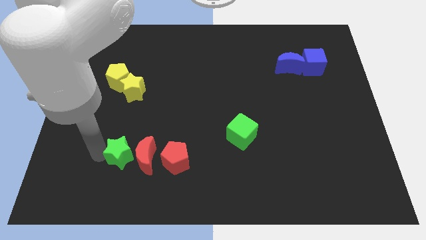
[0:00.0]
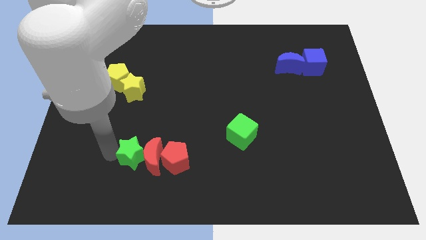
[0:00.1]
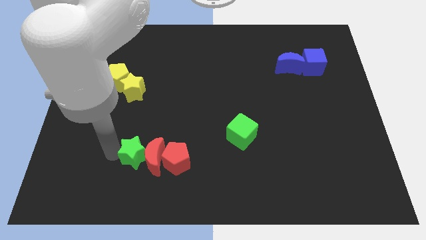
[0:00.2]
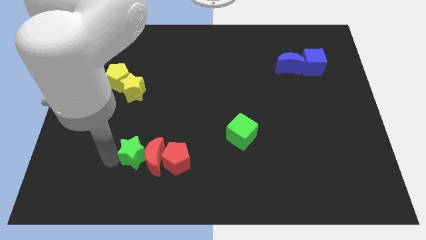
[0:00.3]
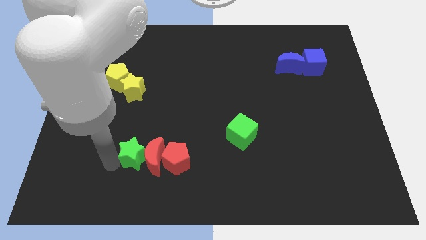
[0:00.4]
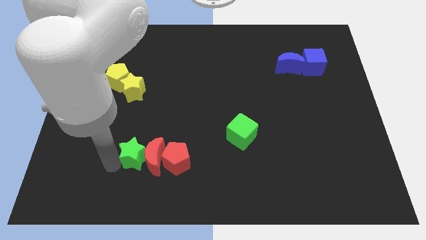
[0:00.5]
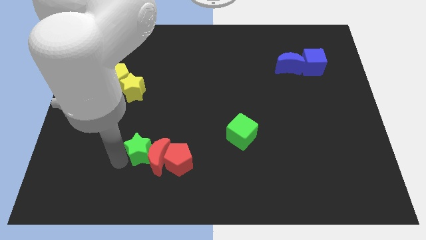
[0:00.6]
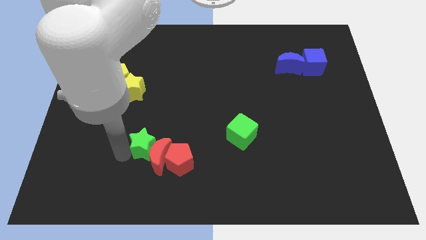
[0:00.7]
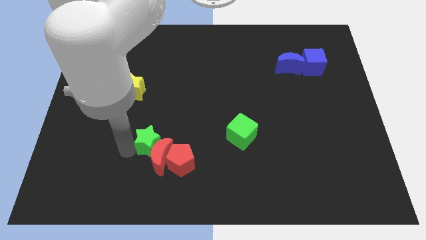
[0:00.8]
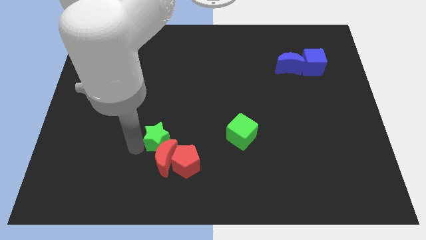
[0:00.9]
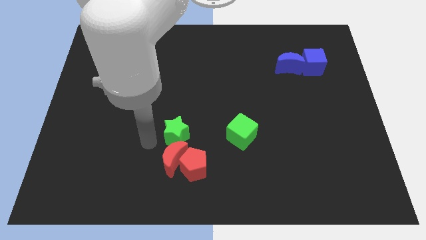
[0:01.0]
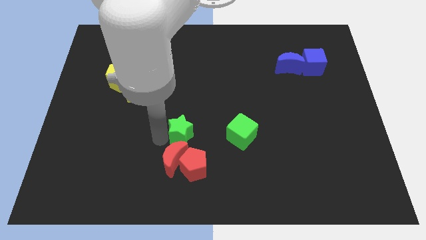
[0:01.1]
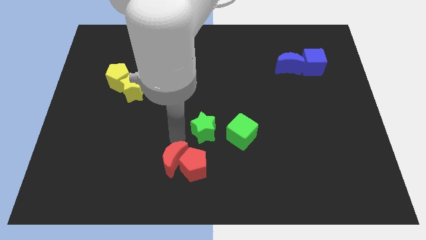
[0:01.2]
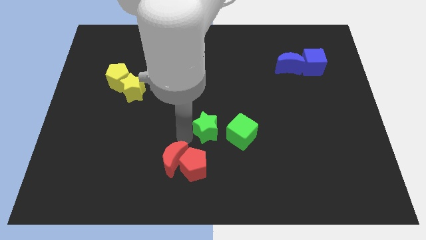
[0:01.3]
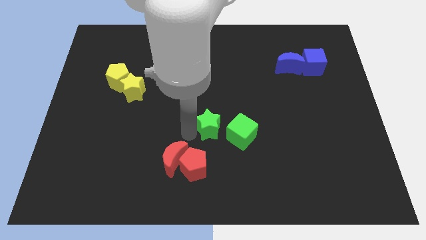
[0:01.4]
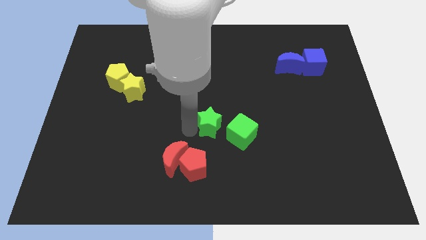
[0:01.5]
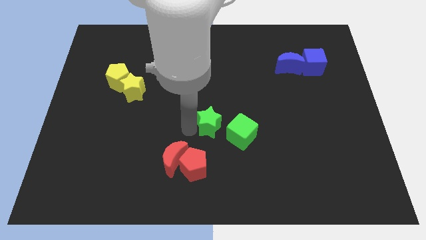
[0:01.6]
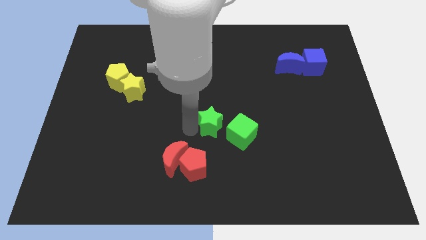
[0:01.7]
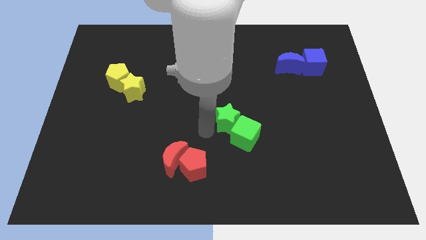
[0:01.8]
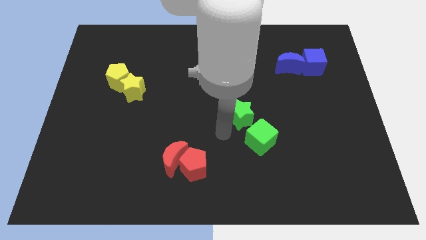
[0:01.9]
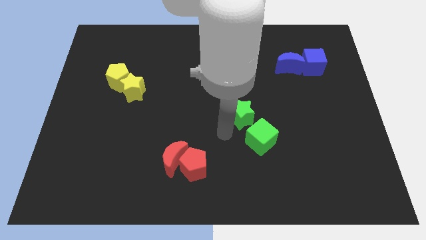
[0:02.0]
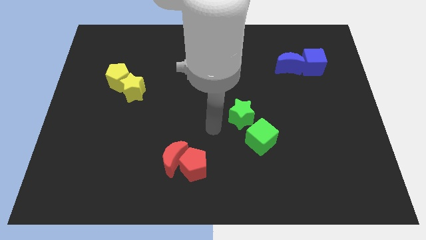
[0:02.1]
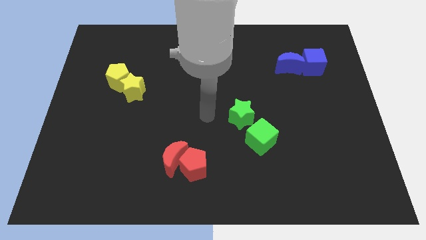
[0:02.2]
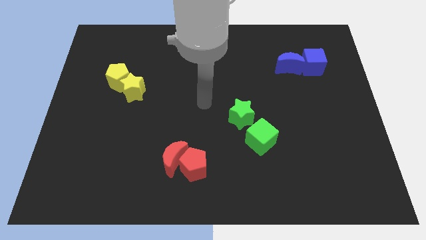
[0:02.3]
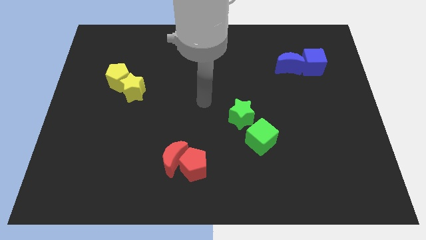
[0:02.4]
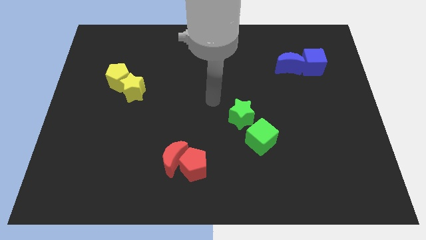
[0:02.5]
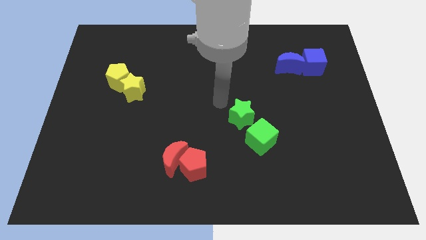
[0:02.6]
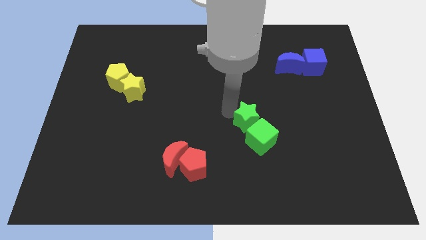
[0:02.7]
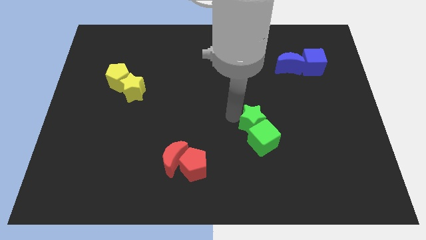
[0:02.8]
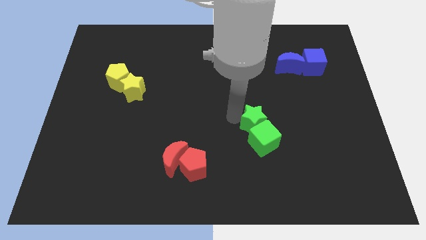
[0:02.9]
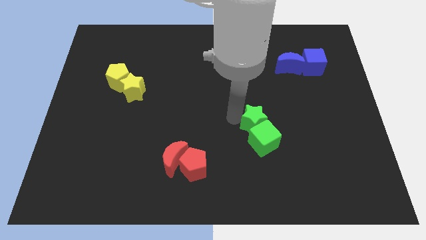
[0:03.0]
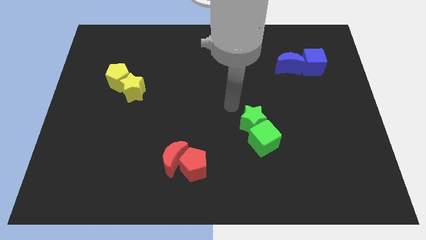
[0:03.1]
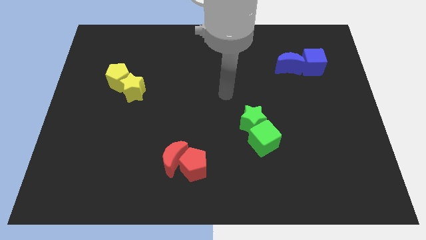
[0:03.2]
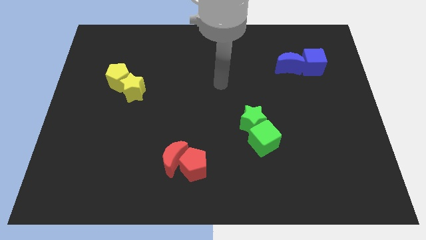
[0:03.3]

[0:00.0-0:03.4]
move the green star into the green cube

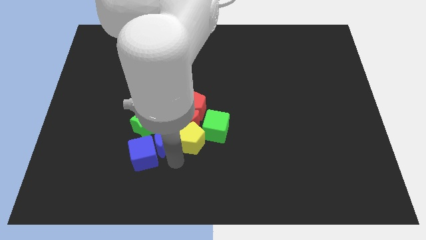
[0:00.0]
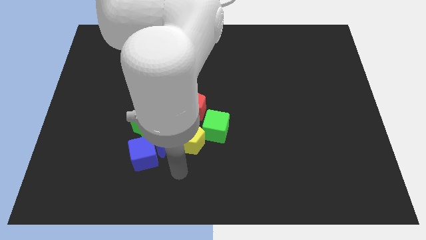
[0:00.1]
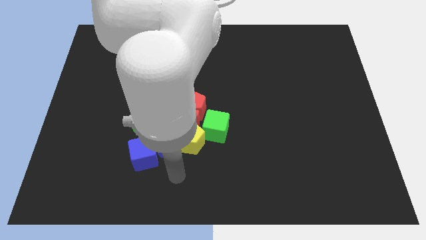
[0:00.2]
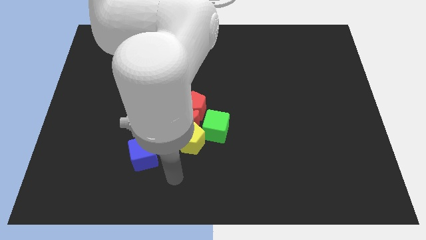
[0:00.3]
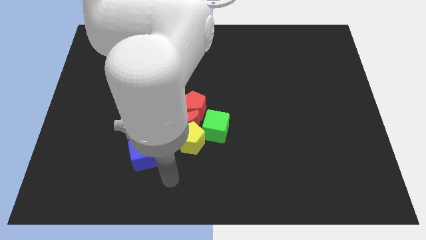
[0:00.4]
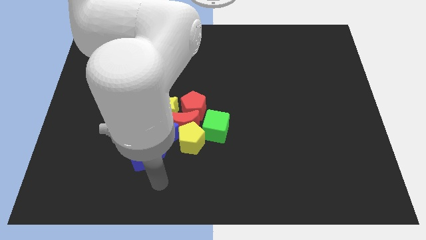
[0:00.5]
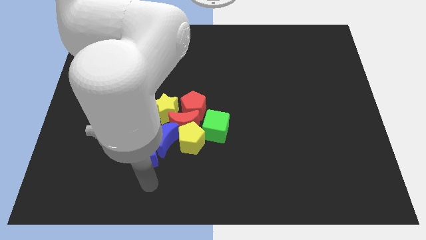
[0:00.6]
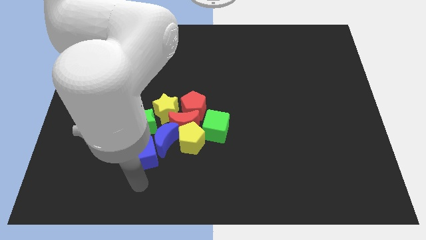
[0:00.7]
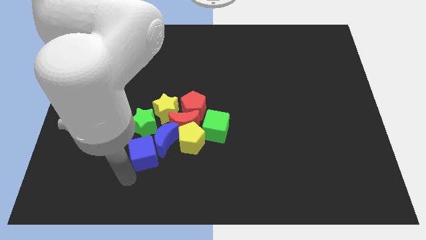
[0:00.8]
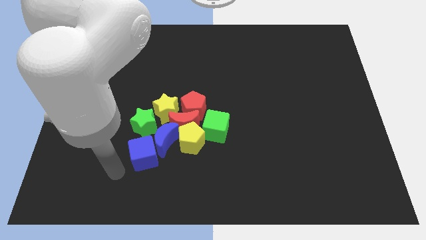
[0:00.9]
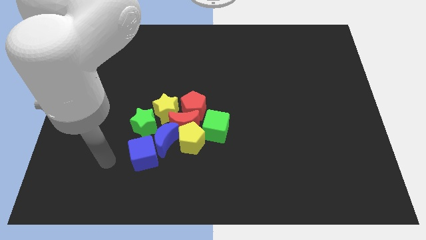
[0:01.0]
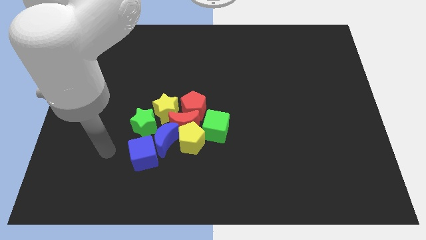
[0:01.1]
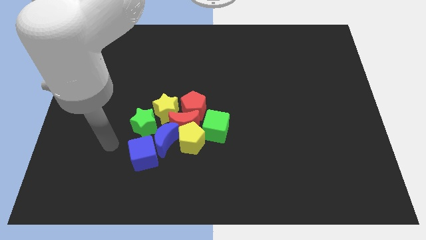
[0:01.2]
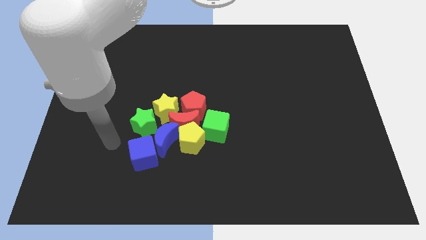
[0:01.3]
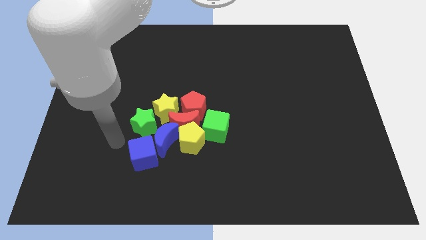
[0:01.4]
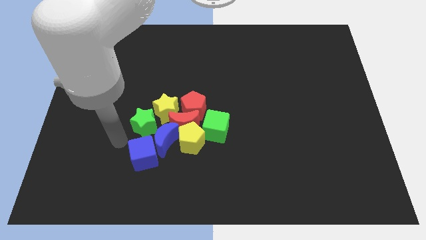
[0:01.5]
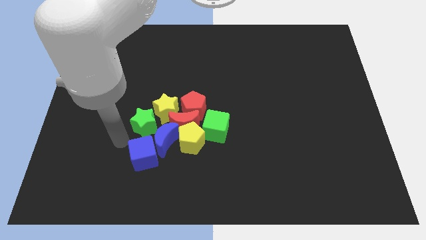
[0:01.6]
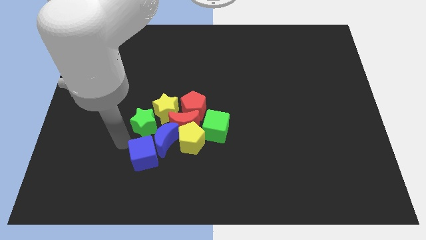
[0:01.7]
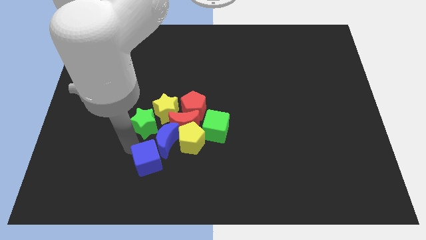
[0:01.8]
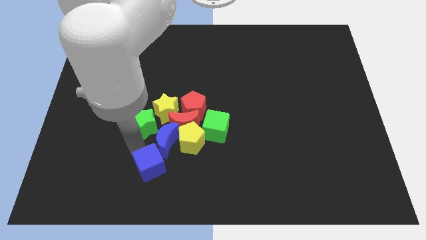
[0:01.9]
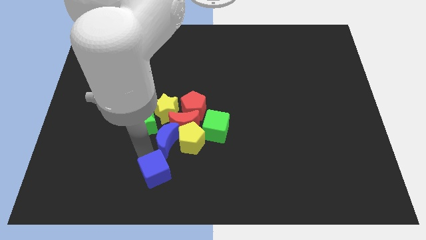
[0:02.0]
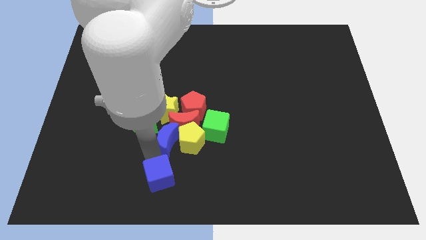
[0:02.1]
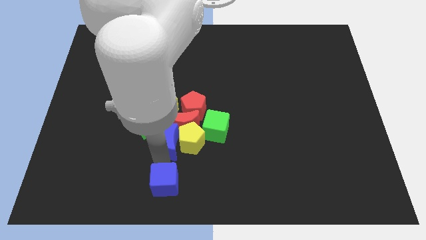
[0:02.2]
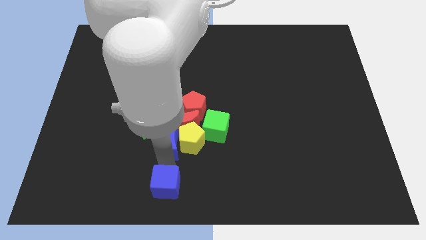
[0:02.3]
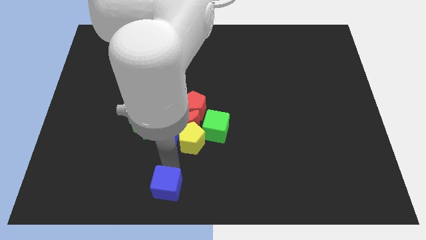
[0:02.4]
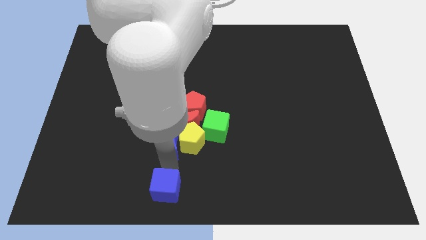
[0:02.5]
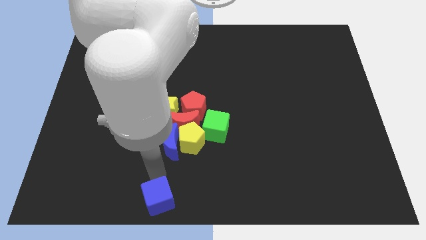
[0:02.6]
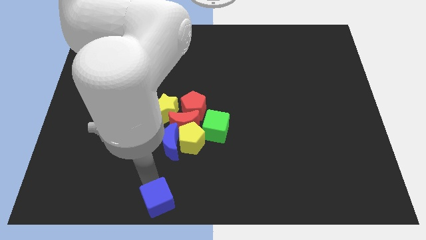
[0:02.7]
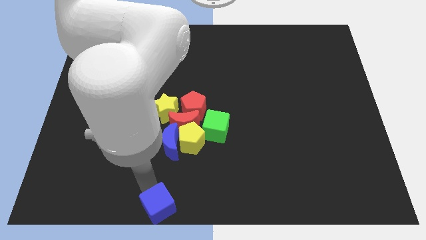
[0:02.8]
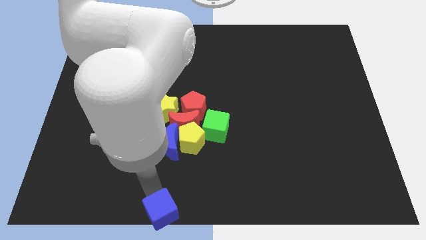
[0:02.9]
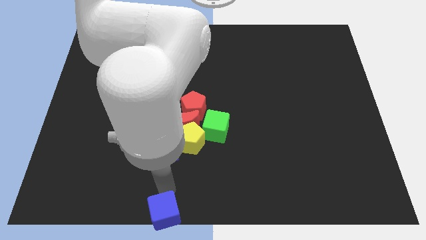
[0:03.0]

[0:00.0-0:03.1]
move the blue cube downwards to the board

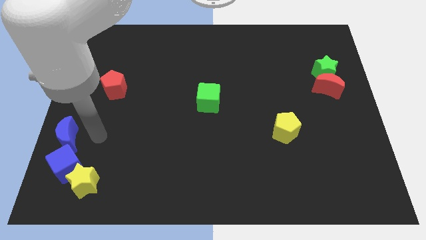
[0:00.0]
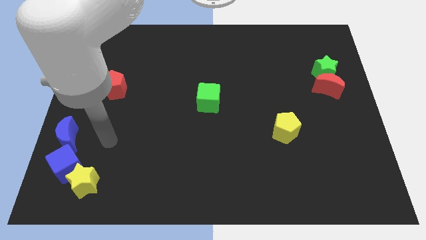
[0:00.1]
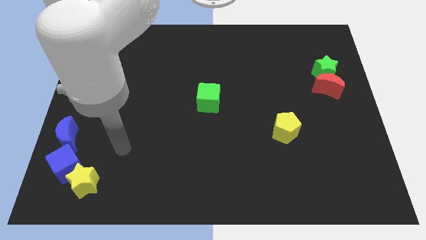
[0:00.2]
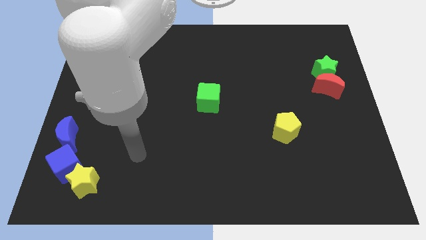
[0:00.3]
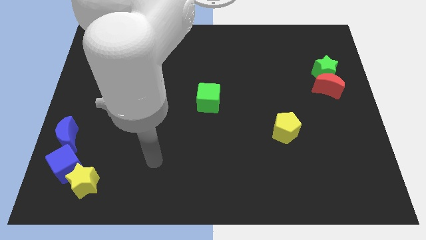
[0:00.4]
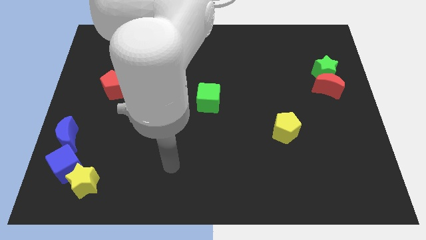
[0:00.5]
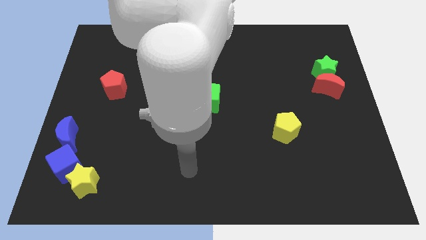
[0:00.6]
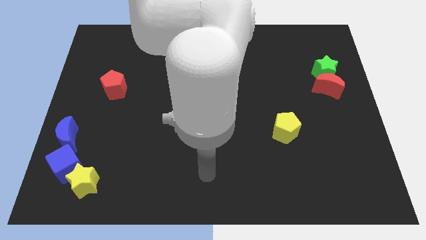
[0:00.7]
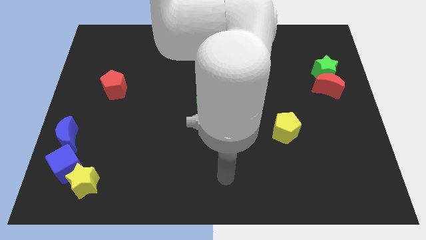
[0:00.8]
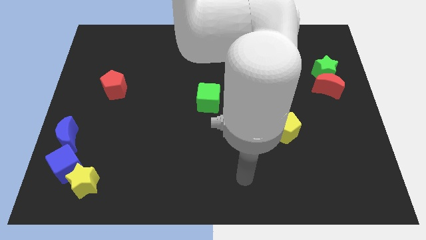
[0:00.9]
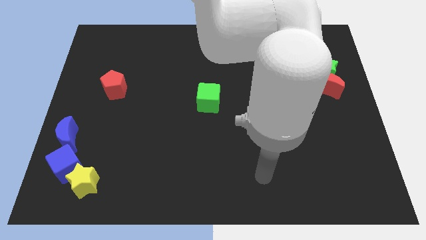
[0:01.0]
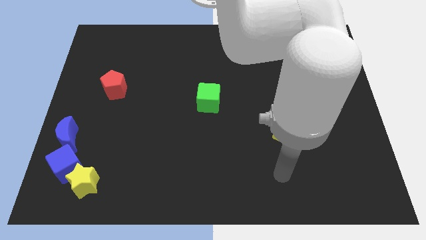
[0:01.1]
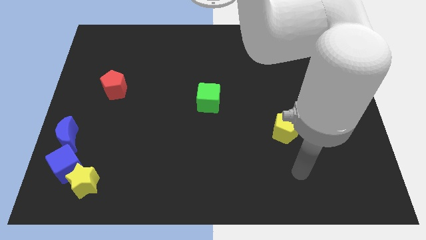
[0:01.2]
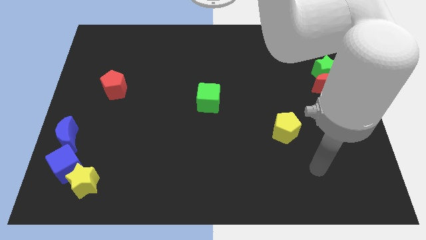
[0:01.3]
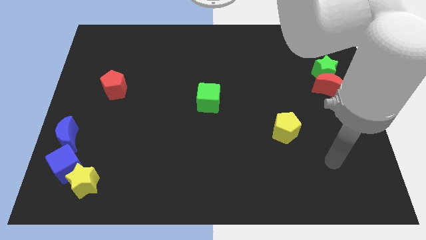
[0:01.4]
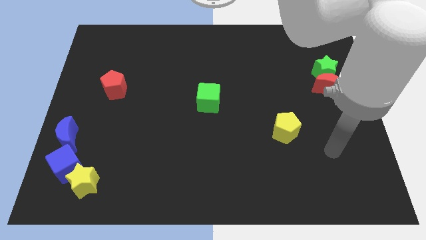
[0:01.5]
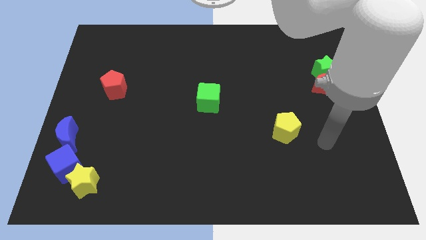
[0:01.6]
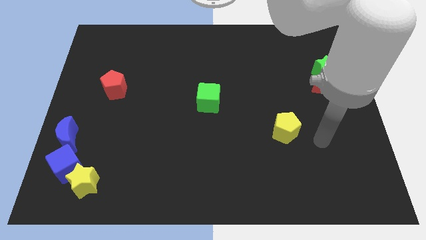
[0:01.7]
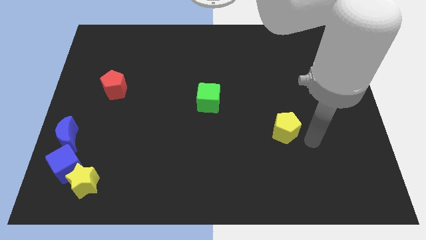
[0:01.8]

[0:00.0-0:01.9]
move your arm from the blue moon to the yellow pentagon

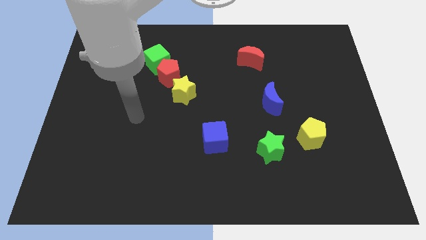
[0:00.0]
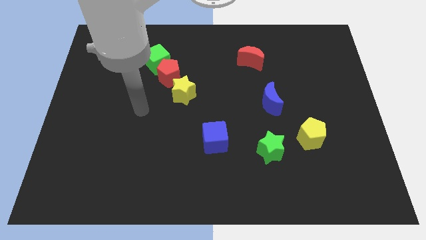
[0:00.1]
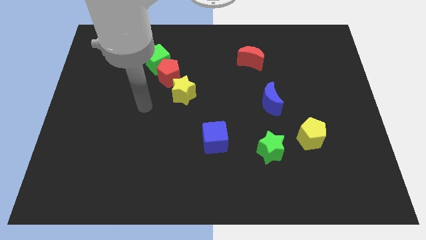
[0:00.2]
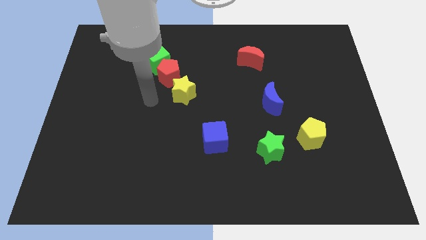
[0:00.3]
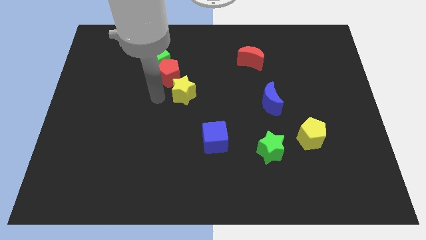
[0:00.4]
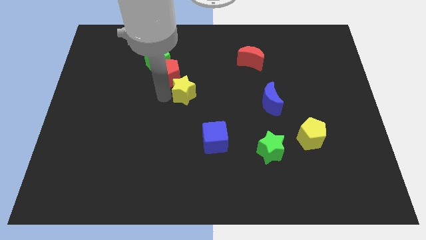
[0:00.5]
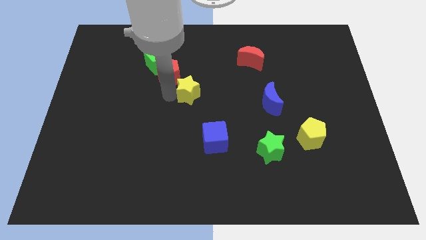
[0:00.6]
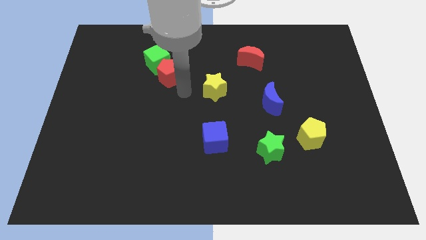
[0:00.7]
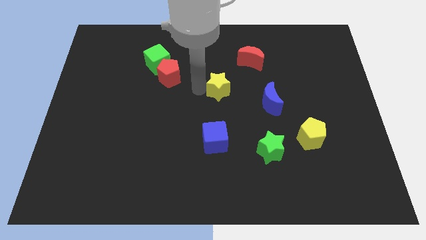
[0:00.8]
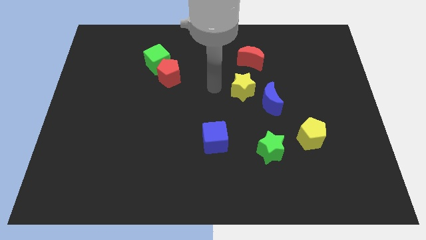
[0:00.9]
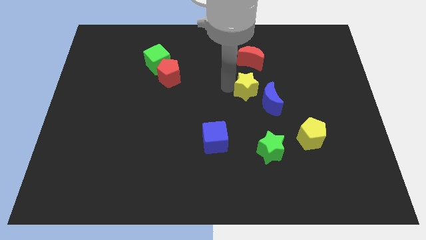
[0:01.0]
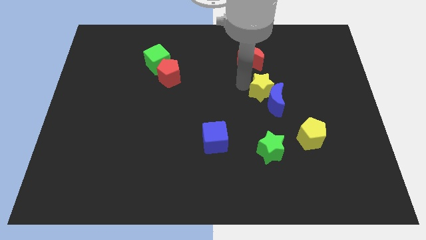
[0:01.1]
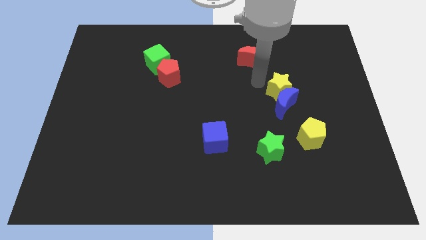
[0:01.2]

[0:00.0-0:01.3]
push the yellow star into the blue moon
